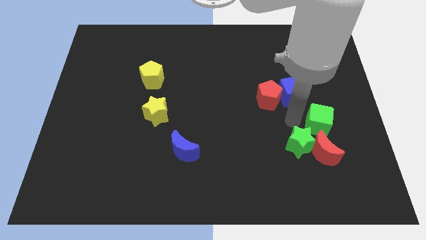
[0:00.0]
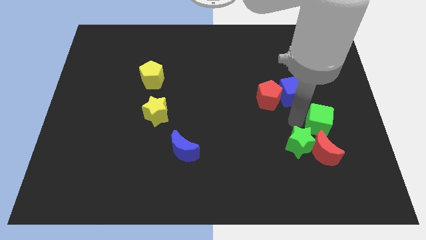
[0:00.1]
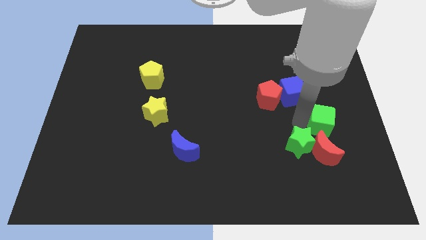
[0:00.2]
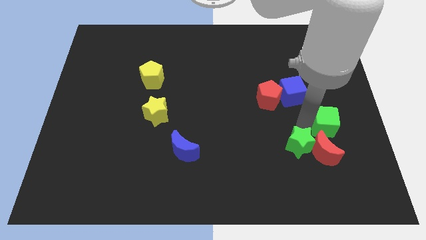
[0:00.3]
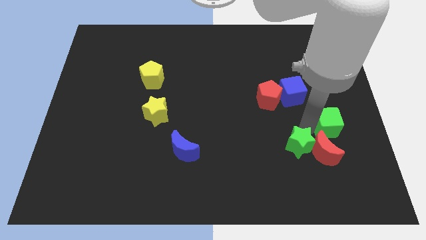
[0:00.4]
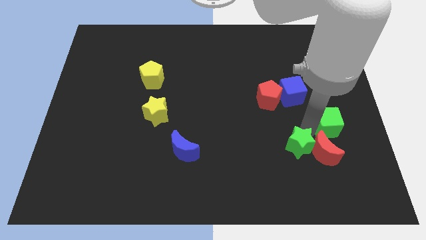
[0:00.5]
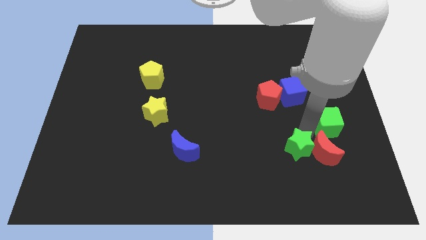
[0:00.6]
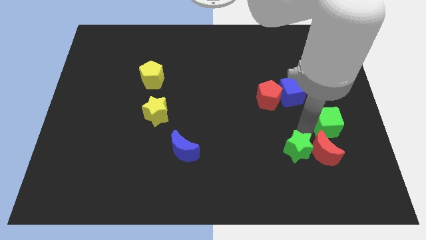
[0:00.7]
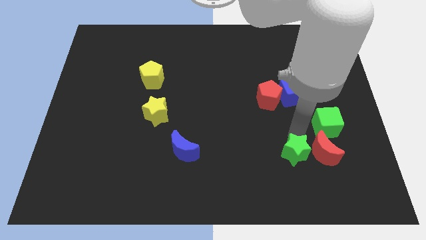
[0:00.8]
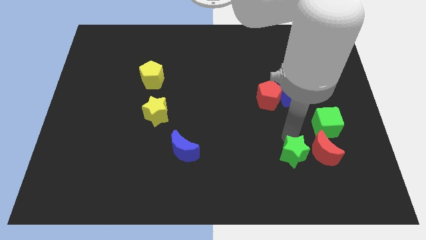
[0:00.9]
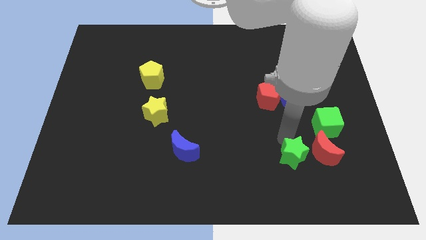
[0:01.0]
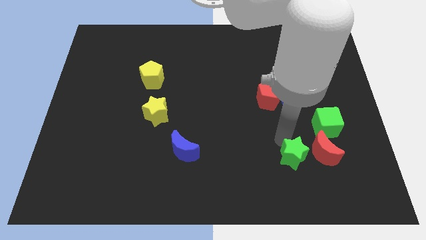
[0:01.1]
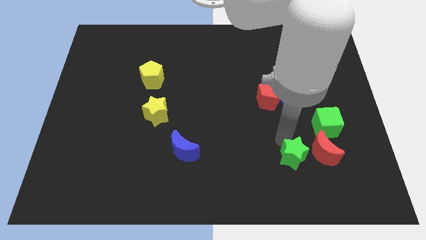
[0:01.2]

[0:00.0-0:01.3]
separate the green star from the green cube and red moon

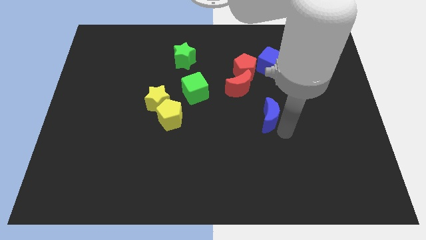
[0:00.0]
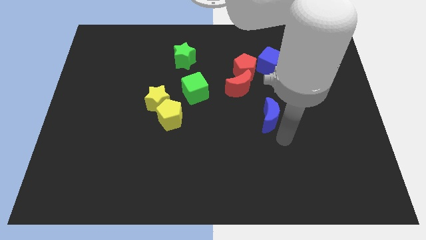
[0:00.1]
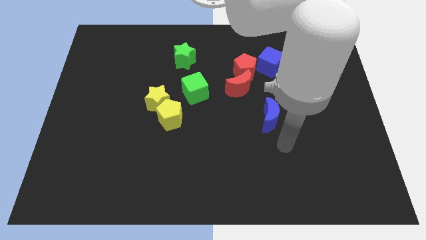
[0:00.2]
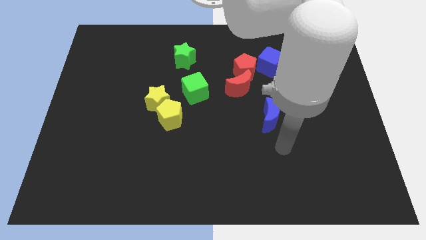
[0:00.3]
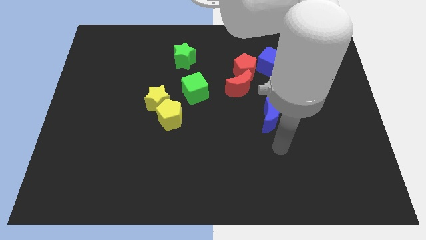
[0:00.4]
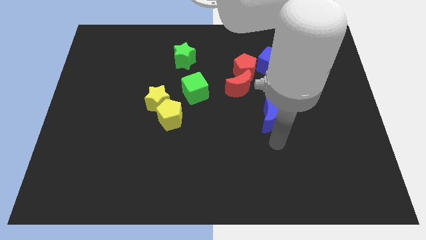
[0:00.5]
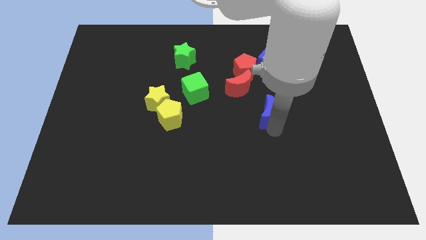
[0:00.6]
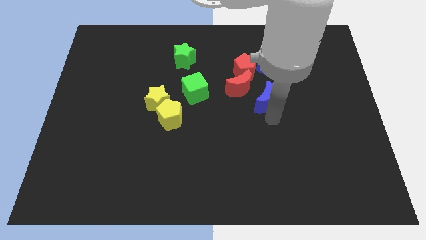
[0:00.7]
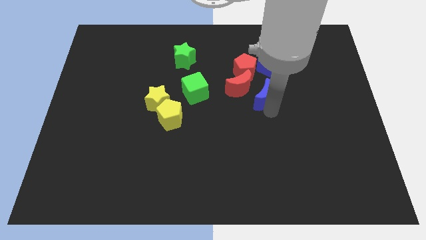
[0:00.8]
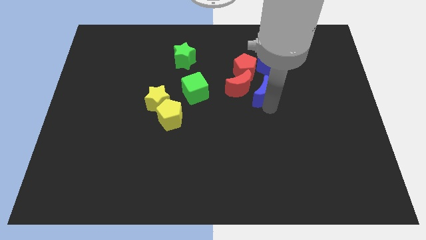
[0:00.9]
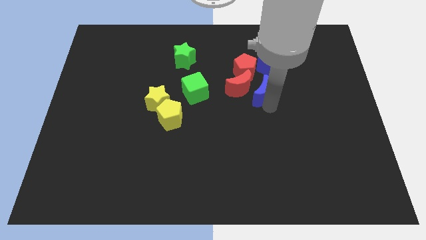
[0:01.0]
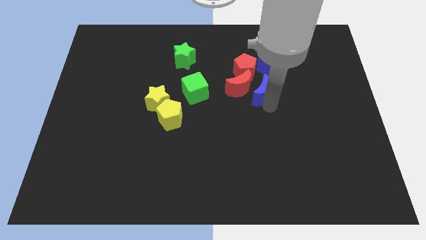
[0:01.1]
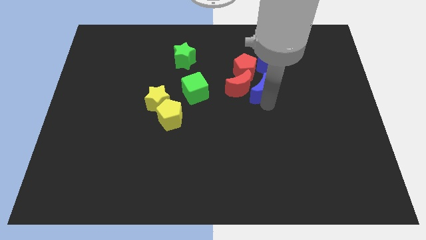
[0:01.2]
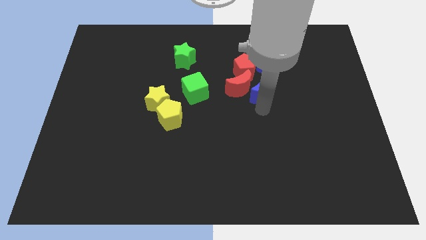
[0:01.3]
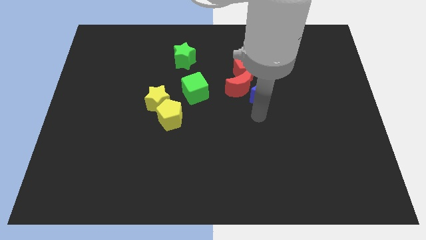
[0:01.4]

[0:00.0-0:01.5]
move the blue crescent to the right of the red crescent

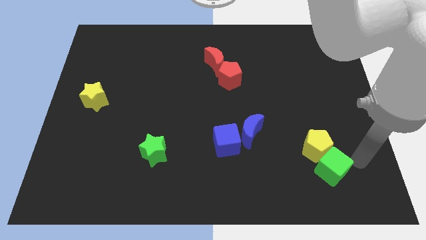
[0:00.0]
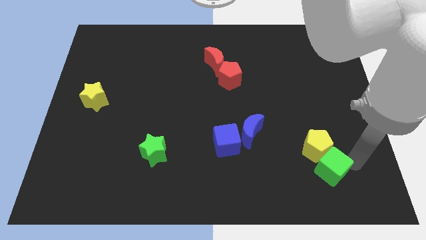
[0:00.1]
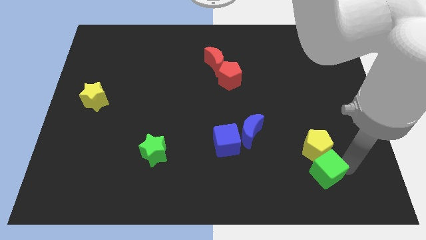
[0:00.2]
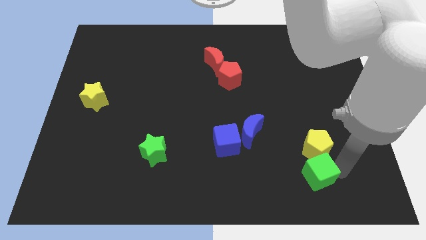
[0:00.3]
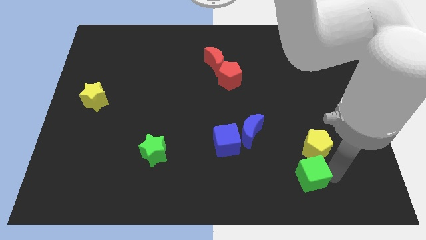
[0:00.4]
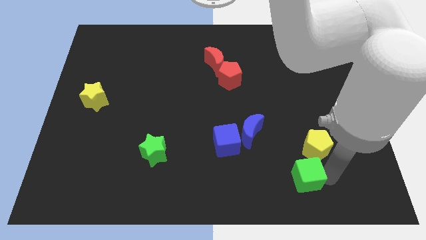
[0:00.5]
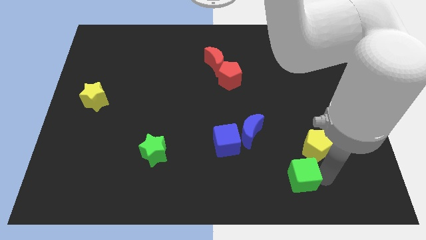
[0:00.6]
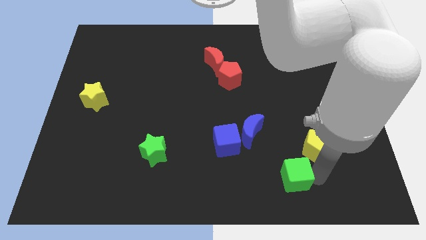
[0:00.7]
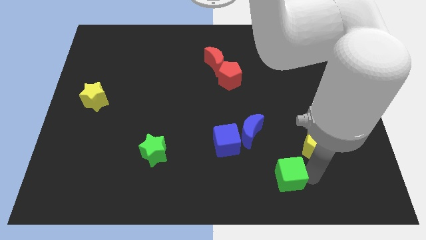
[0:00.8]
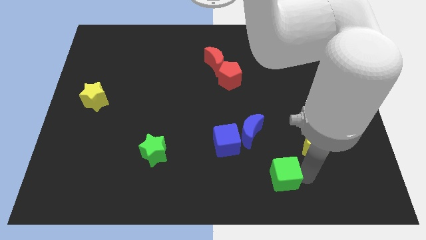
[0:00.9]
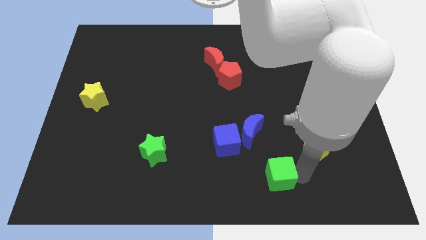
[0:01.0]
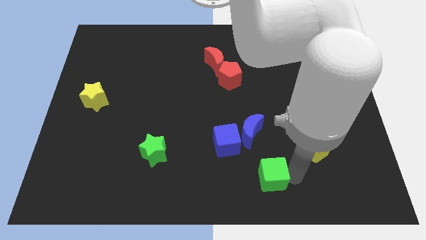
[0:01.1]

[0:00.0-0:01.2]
separate the green cube and the yellow pentagon

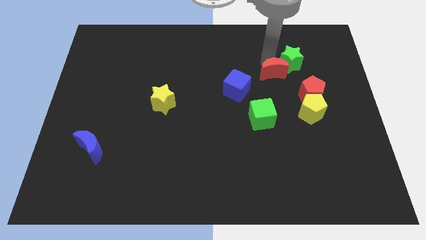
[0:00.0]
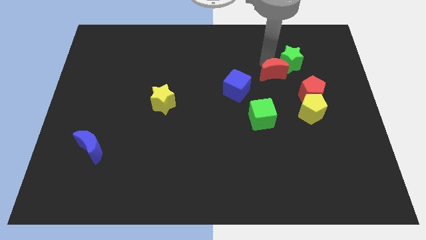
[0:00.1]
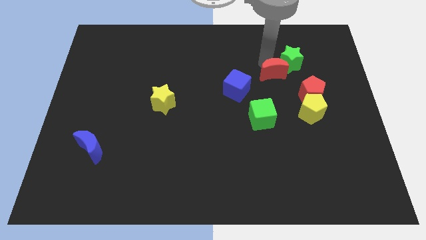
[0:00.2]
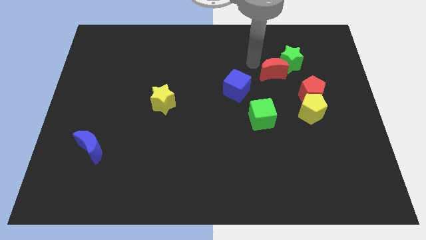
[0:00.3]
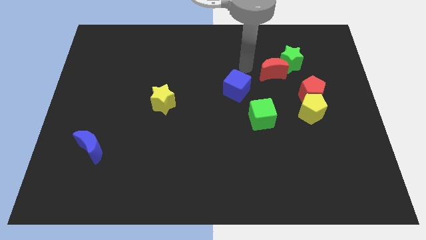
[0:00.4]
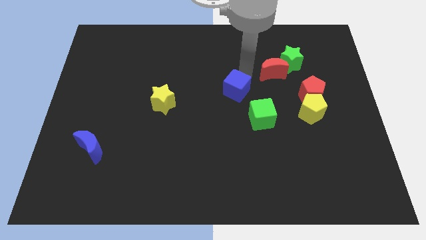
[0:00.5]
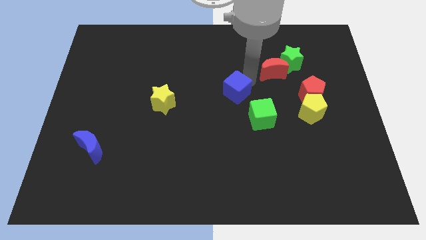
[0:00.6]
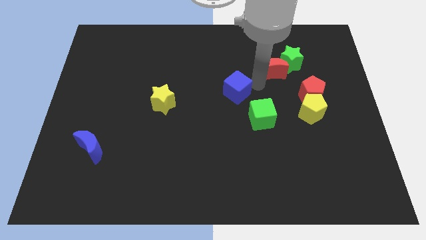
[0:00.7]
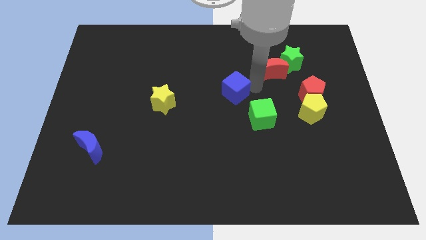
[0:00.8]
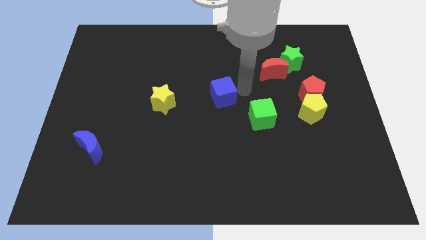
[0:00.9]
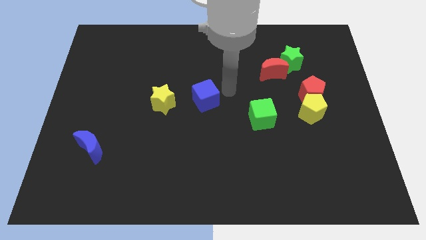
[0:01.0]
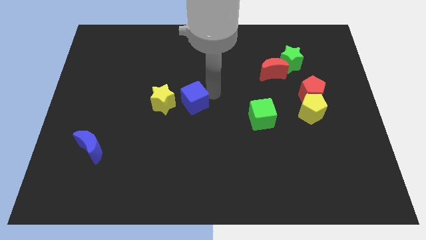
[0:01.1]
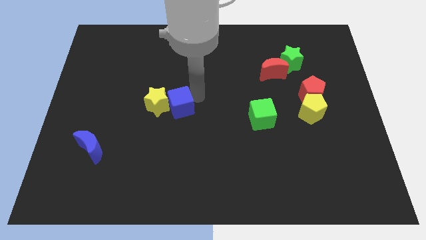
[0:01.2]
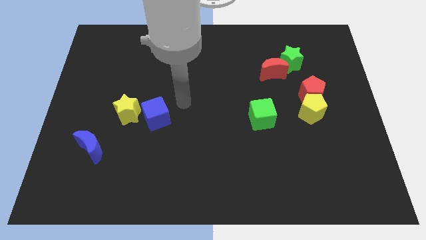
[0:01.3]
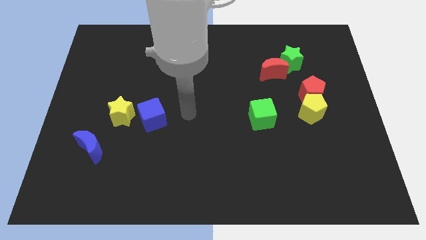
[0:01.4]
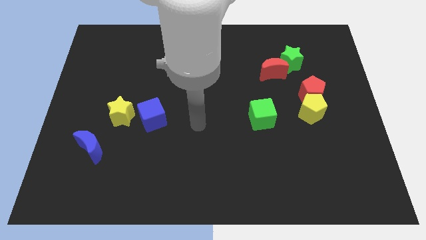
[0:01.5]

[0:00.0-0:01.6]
push the blue cube into the yellow star

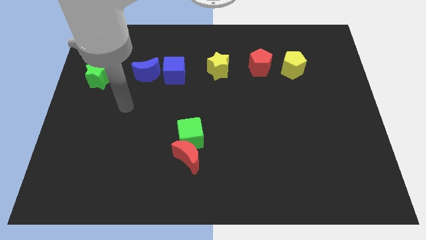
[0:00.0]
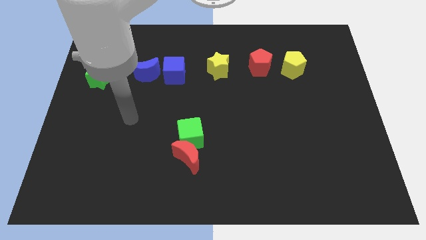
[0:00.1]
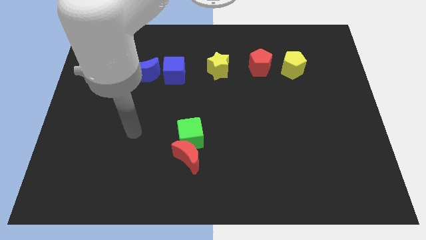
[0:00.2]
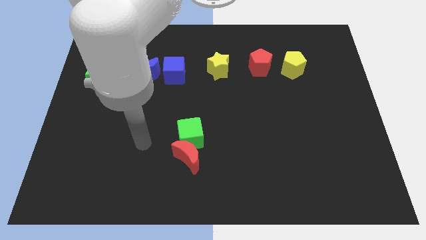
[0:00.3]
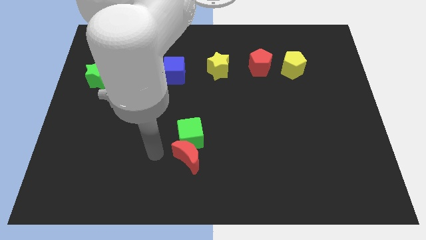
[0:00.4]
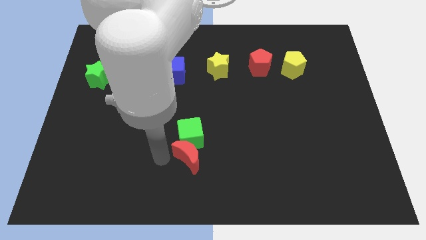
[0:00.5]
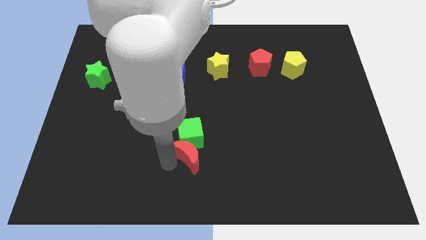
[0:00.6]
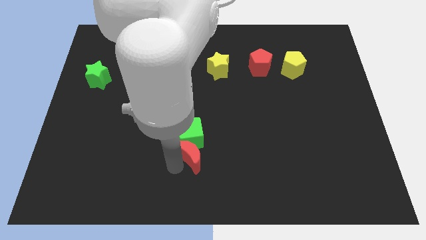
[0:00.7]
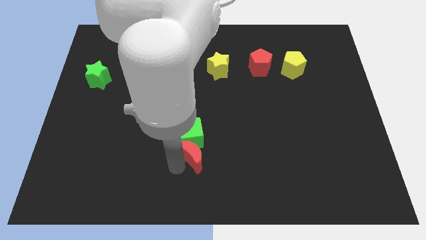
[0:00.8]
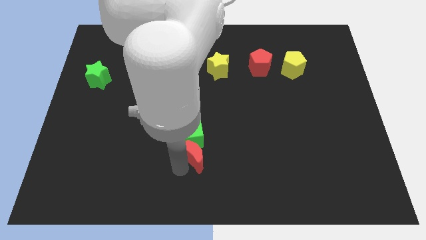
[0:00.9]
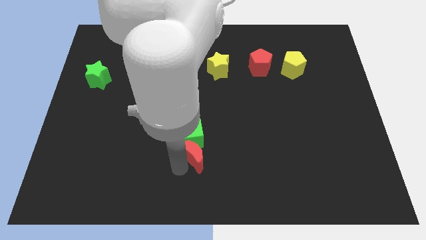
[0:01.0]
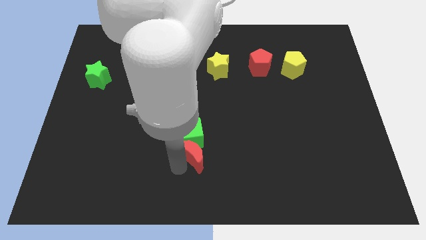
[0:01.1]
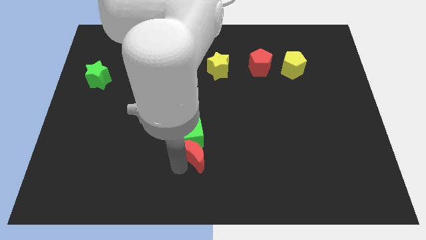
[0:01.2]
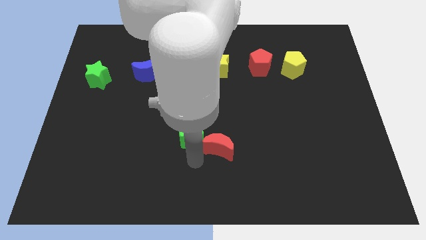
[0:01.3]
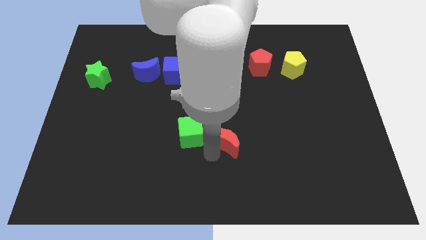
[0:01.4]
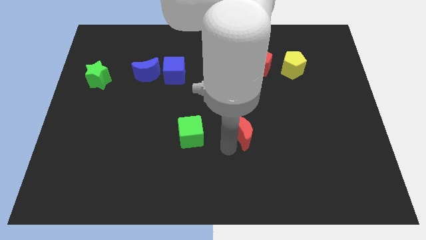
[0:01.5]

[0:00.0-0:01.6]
separate the red moon from the green cube

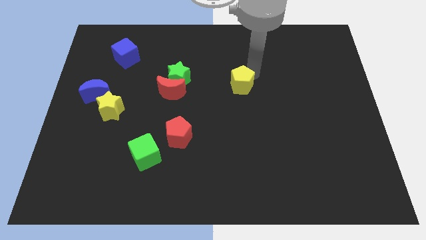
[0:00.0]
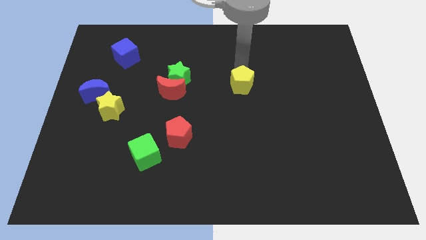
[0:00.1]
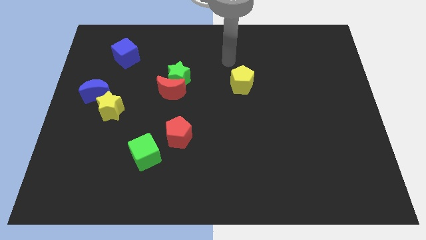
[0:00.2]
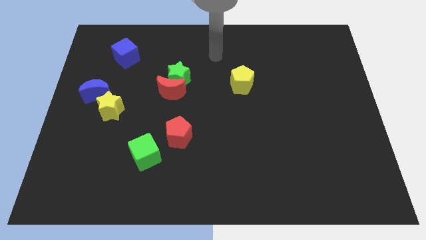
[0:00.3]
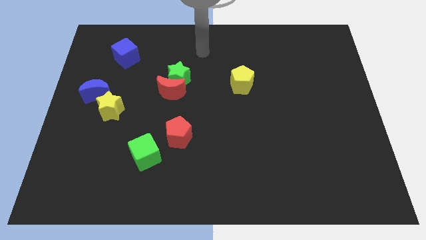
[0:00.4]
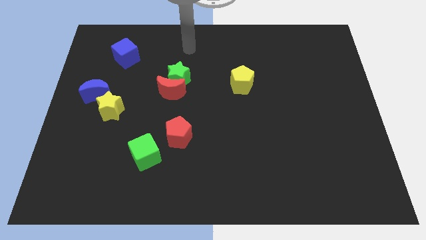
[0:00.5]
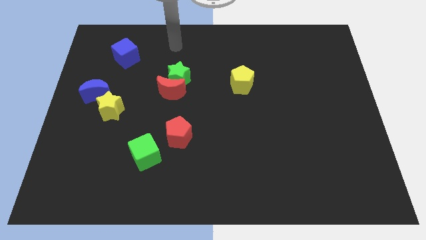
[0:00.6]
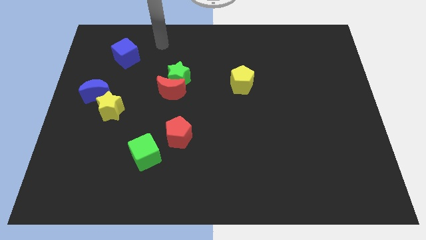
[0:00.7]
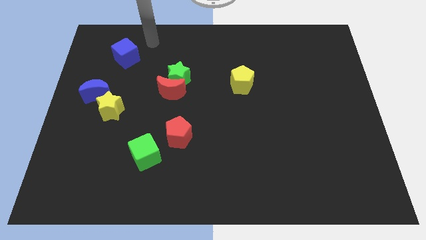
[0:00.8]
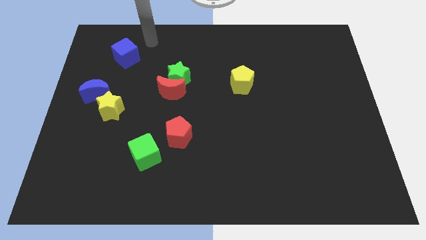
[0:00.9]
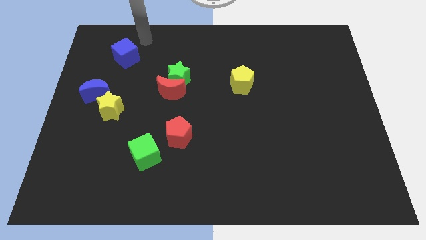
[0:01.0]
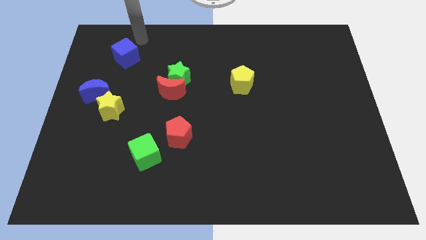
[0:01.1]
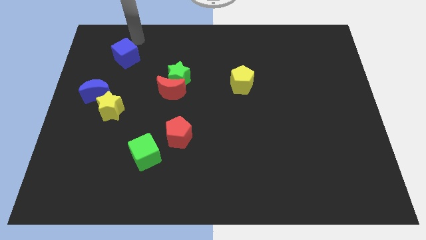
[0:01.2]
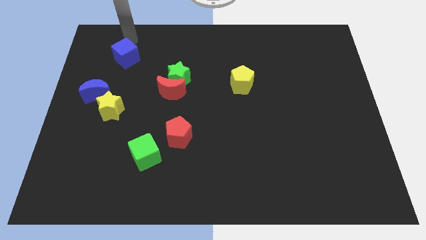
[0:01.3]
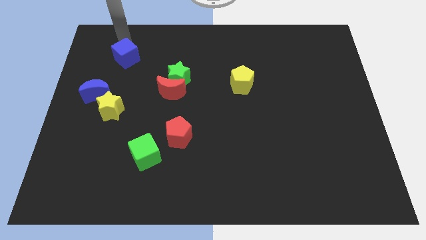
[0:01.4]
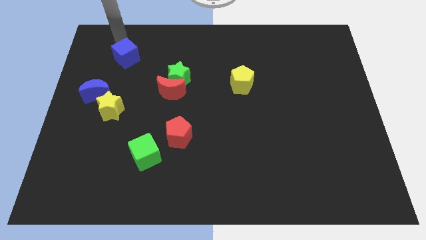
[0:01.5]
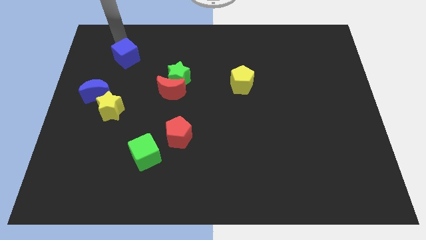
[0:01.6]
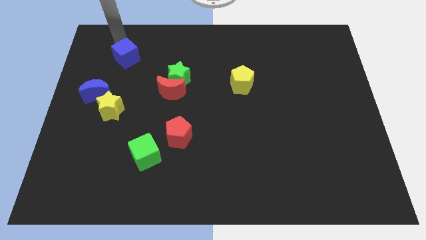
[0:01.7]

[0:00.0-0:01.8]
move your arm away from the yellow pentagon
